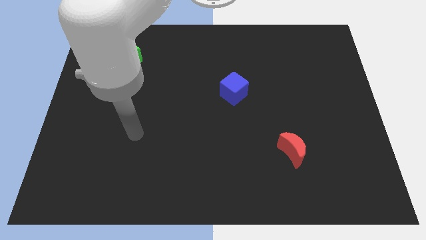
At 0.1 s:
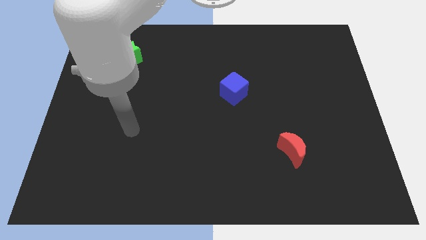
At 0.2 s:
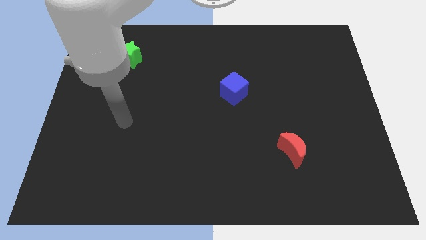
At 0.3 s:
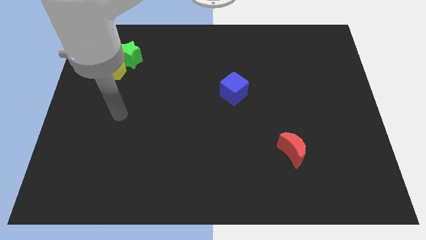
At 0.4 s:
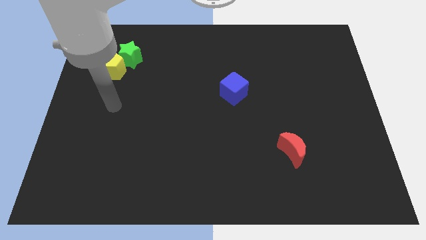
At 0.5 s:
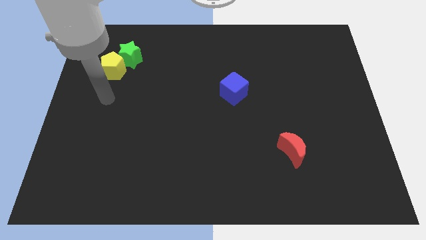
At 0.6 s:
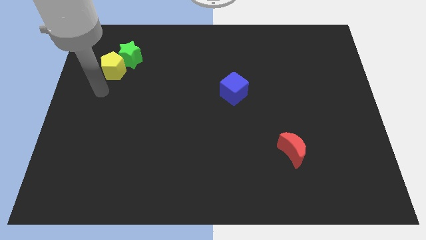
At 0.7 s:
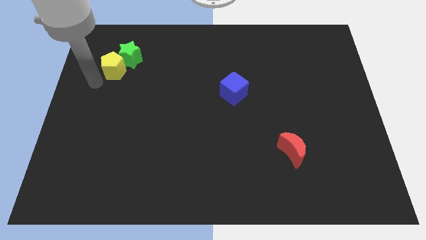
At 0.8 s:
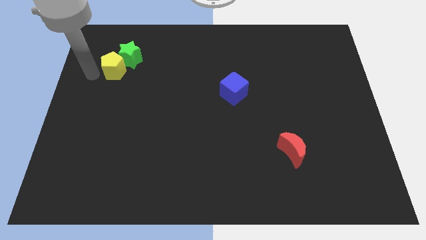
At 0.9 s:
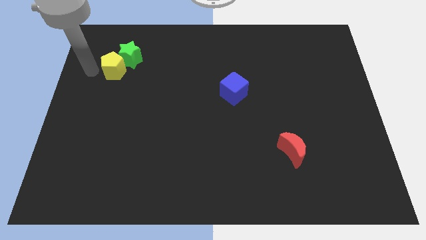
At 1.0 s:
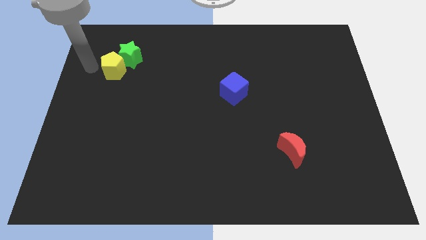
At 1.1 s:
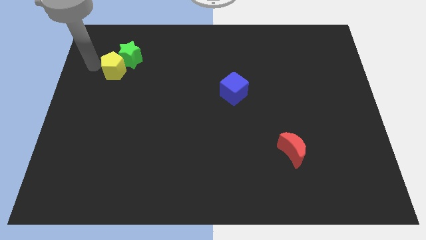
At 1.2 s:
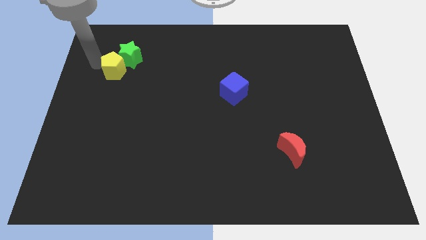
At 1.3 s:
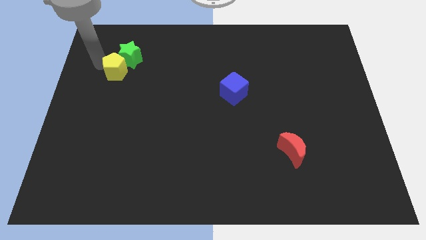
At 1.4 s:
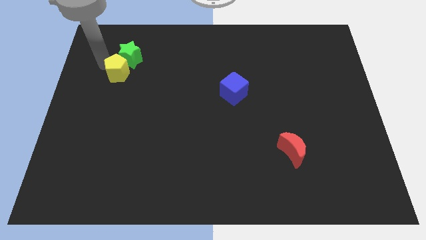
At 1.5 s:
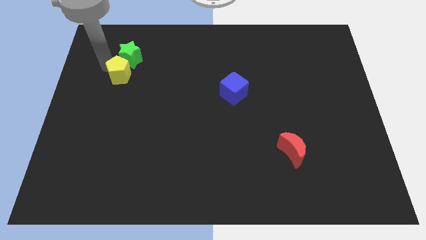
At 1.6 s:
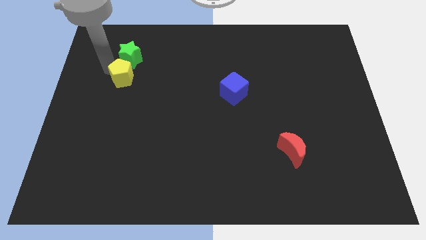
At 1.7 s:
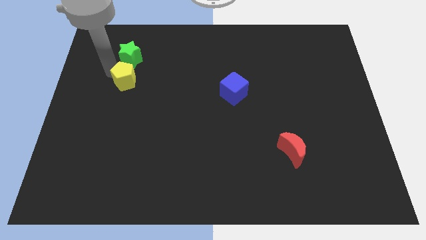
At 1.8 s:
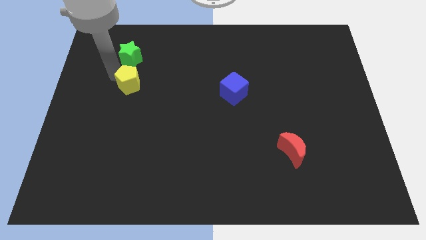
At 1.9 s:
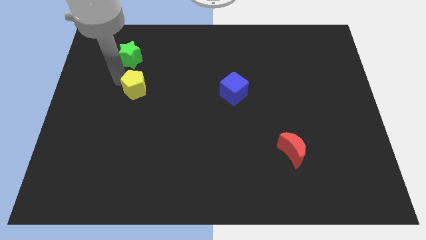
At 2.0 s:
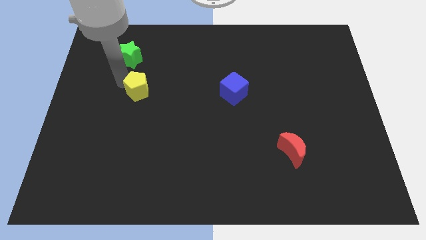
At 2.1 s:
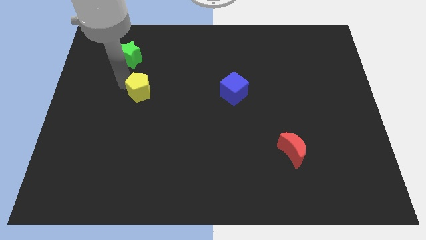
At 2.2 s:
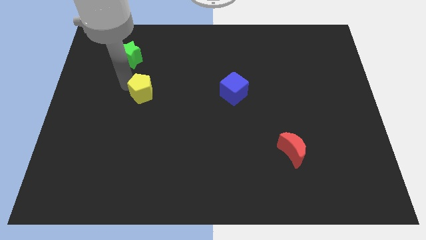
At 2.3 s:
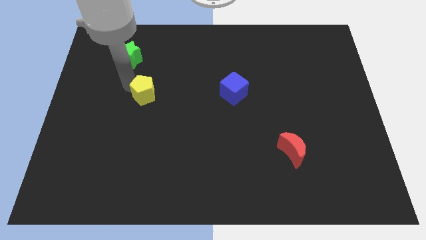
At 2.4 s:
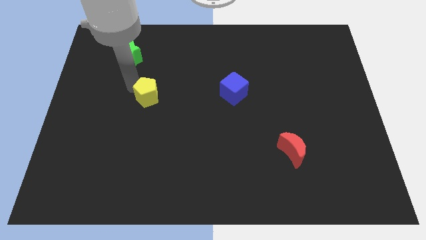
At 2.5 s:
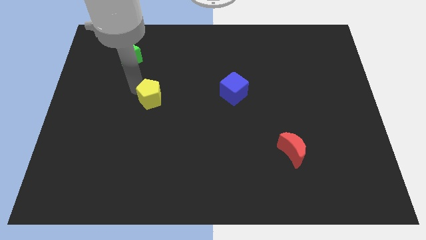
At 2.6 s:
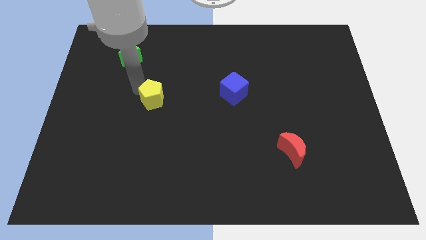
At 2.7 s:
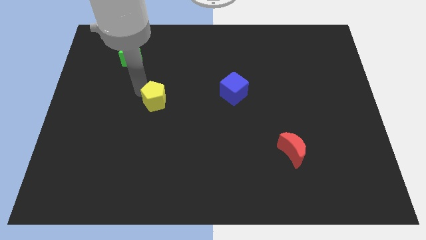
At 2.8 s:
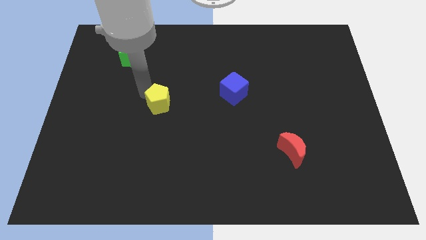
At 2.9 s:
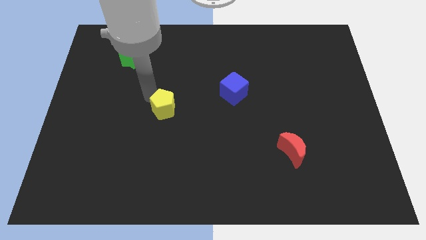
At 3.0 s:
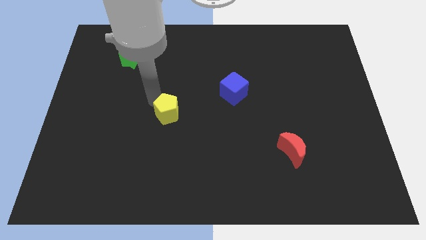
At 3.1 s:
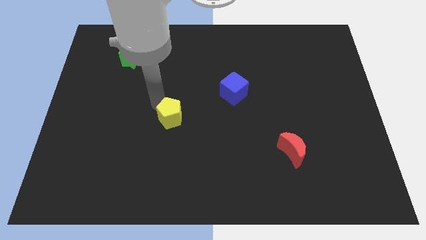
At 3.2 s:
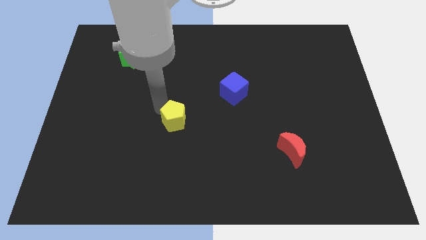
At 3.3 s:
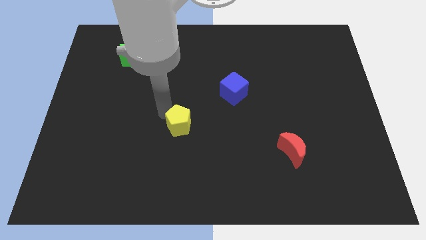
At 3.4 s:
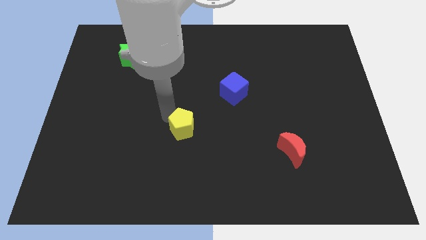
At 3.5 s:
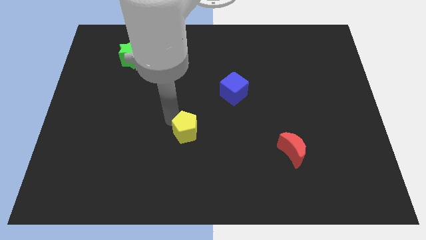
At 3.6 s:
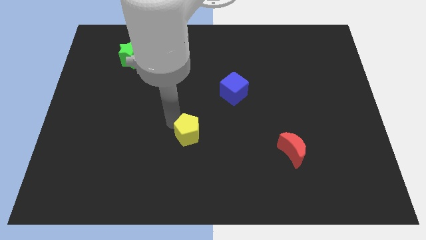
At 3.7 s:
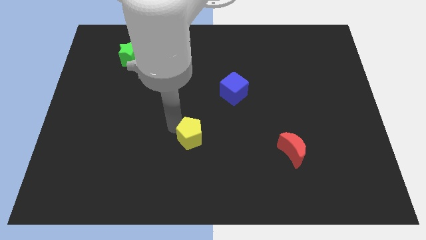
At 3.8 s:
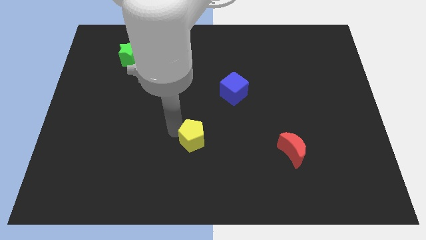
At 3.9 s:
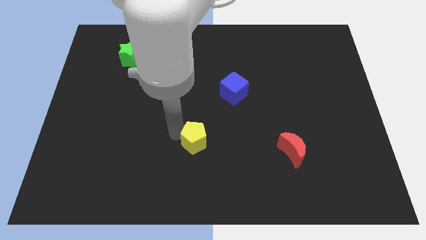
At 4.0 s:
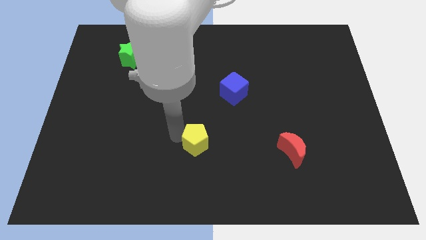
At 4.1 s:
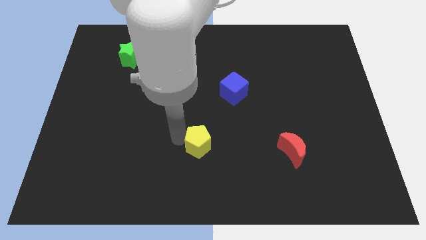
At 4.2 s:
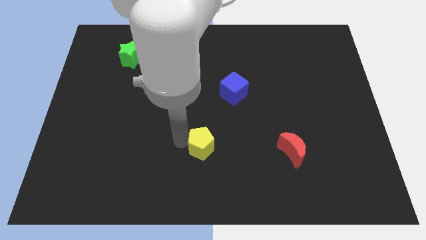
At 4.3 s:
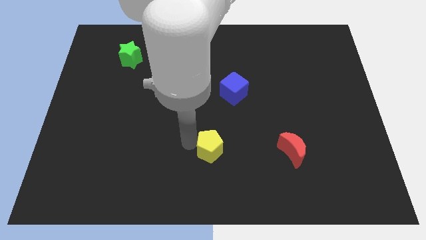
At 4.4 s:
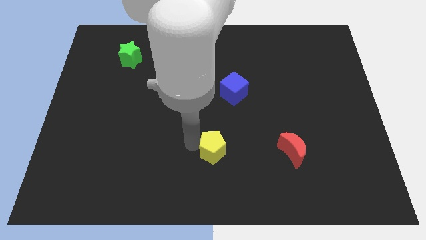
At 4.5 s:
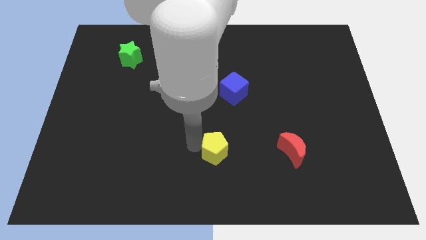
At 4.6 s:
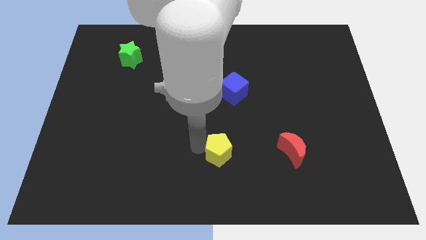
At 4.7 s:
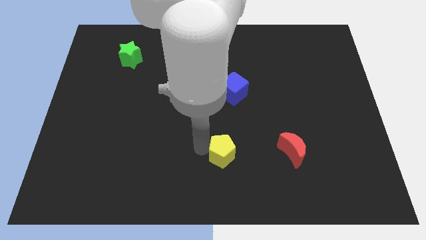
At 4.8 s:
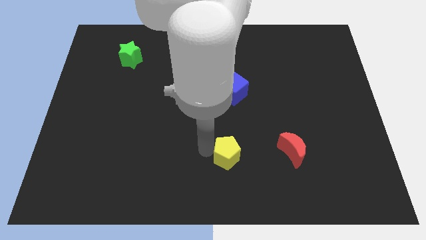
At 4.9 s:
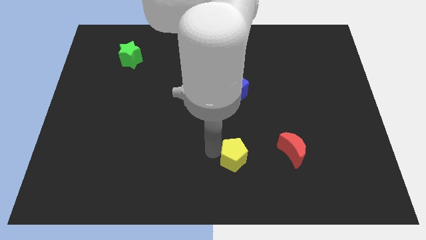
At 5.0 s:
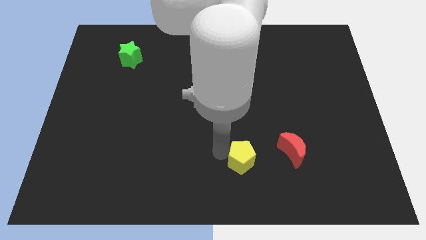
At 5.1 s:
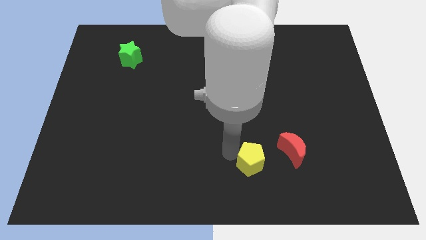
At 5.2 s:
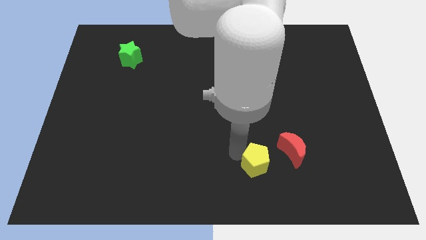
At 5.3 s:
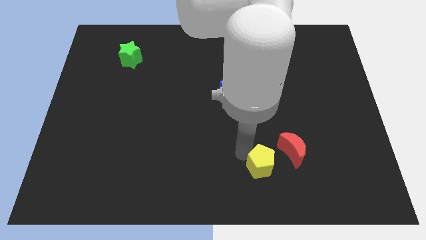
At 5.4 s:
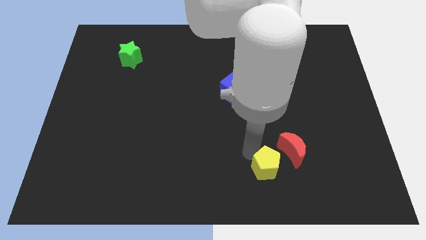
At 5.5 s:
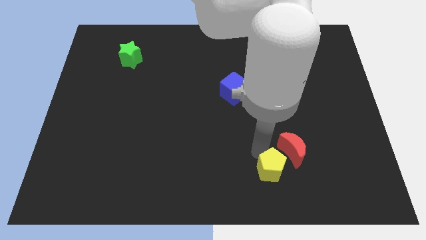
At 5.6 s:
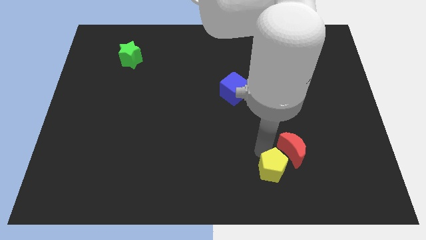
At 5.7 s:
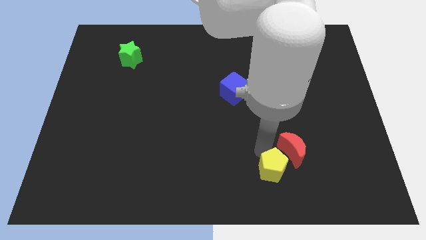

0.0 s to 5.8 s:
push the yellow pentagon to the red moon

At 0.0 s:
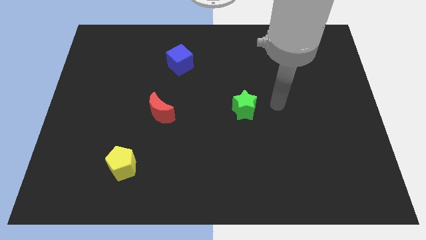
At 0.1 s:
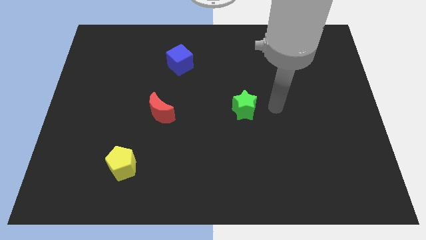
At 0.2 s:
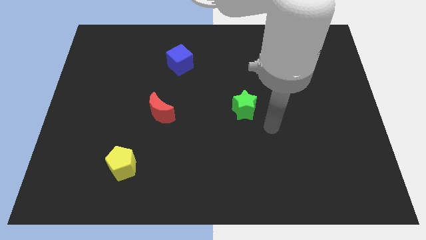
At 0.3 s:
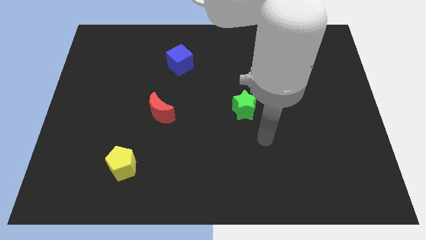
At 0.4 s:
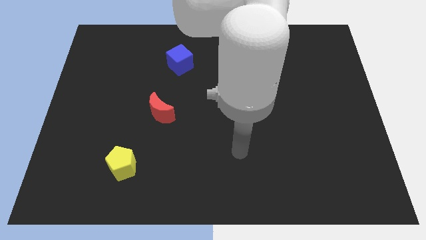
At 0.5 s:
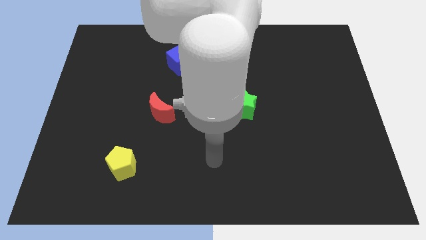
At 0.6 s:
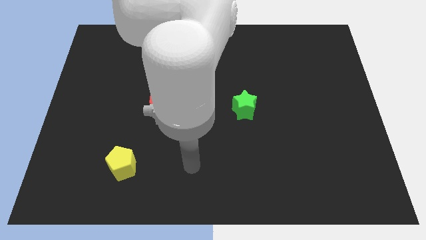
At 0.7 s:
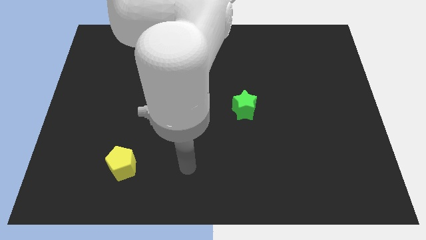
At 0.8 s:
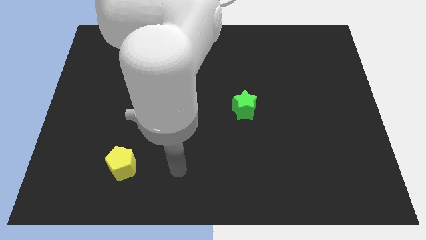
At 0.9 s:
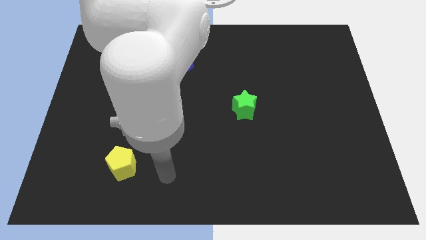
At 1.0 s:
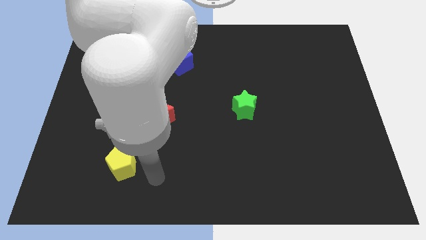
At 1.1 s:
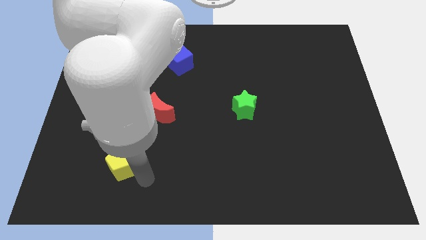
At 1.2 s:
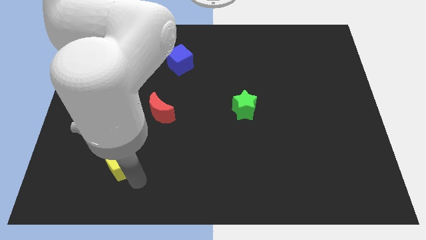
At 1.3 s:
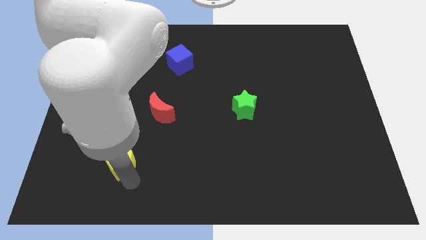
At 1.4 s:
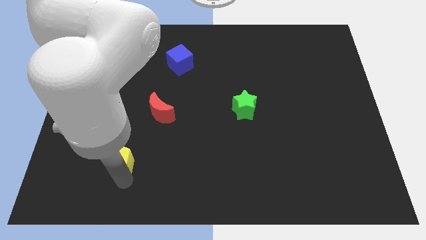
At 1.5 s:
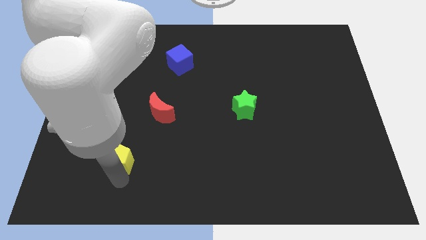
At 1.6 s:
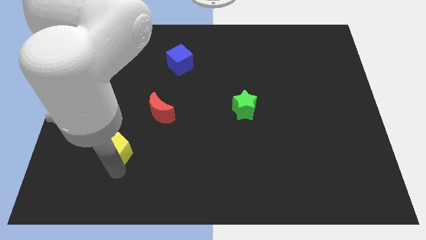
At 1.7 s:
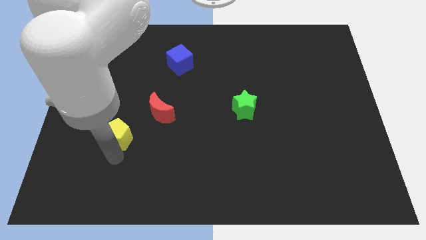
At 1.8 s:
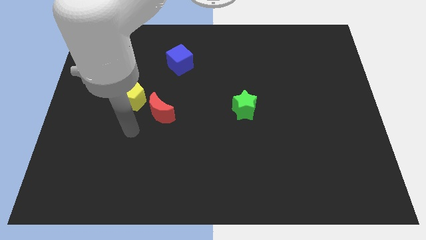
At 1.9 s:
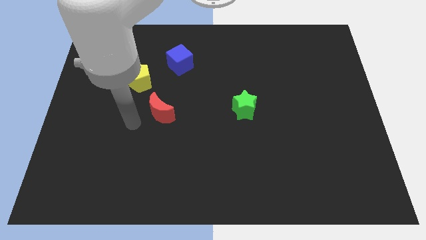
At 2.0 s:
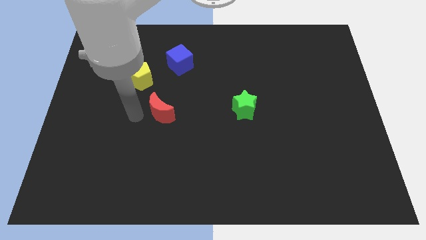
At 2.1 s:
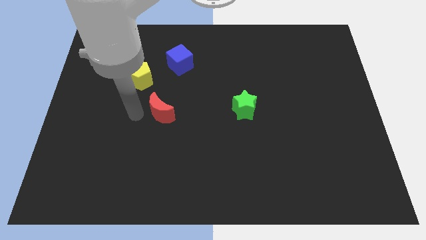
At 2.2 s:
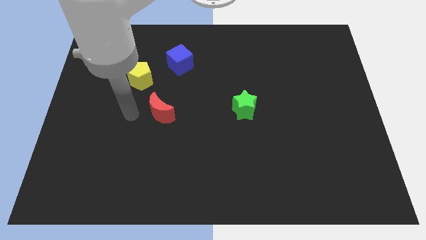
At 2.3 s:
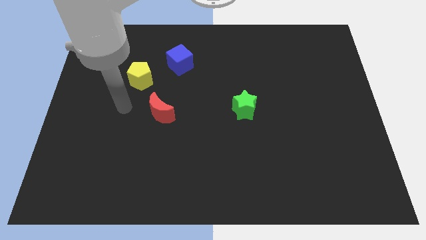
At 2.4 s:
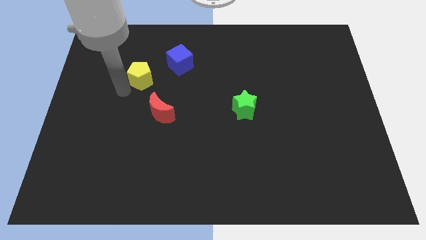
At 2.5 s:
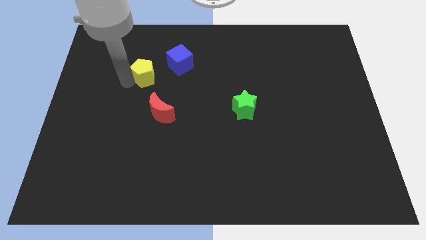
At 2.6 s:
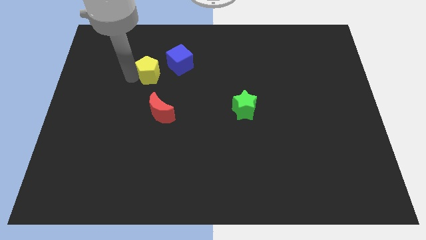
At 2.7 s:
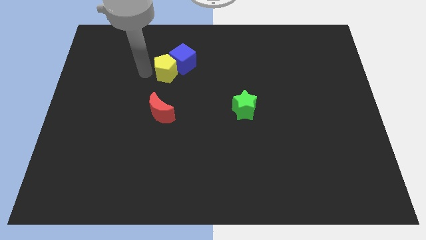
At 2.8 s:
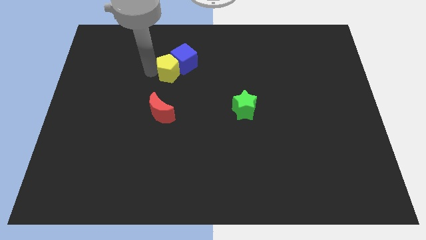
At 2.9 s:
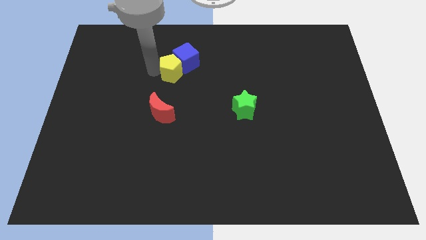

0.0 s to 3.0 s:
push the pentagon towards the blue cube
